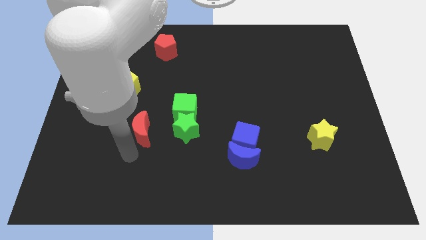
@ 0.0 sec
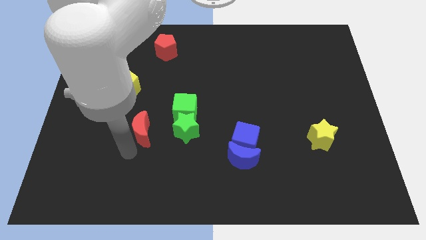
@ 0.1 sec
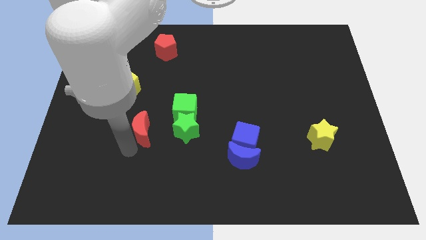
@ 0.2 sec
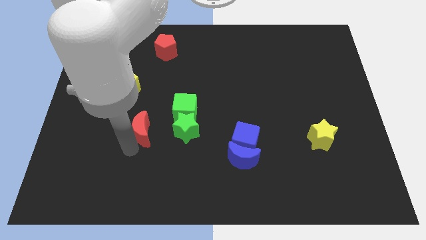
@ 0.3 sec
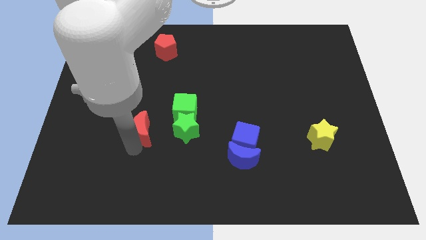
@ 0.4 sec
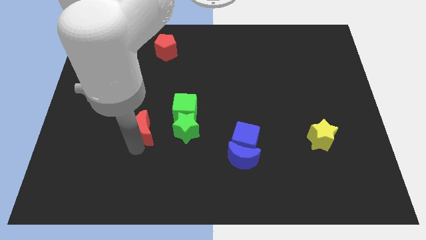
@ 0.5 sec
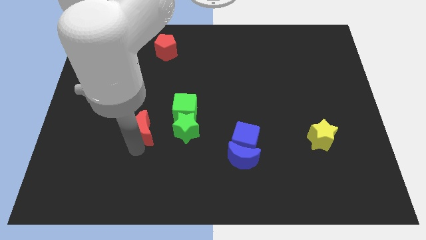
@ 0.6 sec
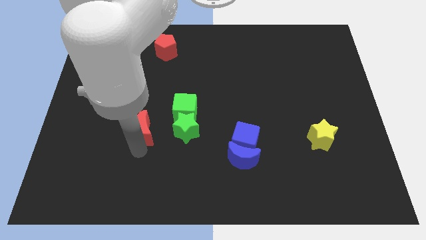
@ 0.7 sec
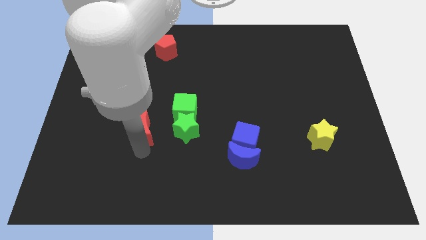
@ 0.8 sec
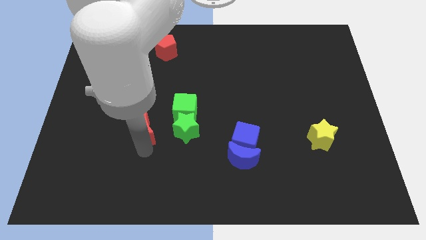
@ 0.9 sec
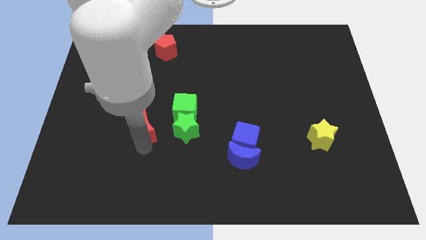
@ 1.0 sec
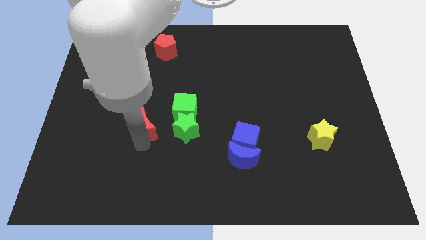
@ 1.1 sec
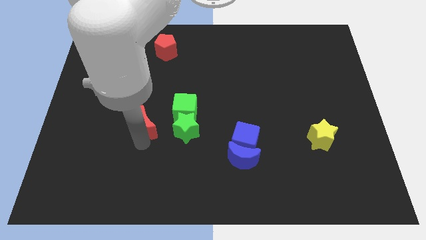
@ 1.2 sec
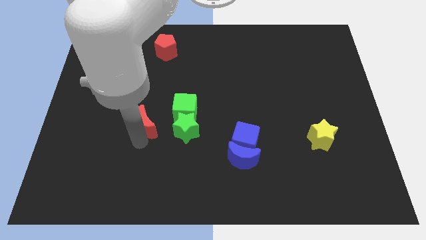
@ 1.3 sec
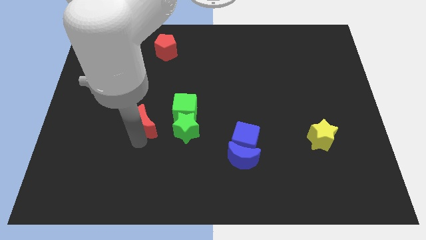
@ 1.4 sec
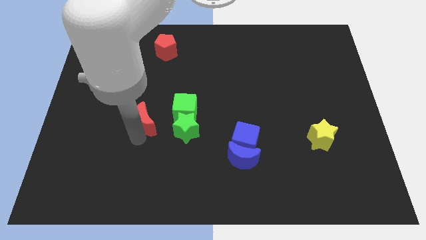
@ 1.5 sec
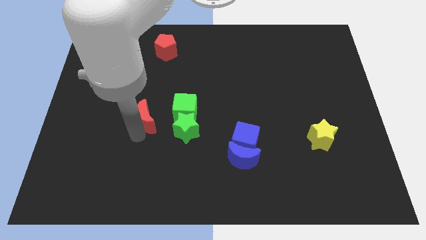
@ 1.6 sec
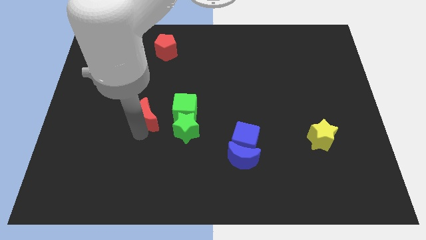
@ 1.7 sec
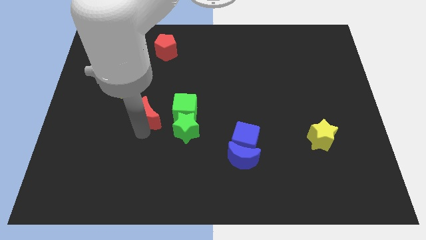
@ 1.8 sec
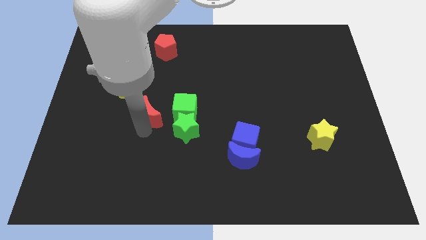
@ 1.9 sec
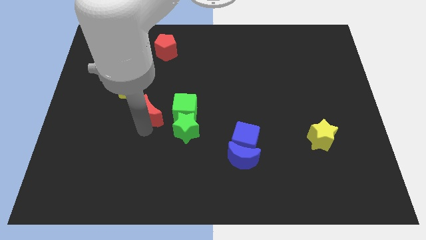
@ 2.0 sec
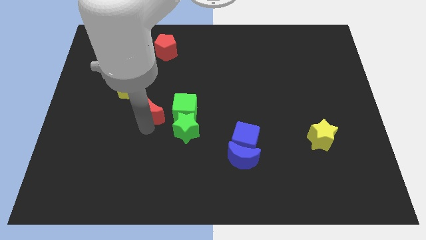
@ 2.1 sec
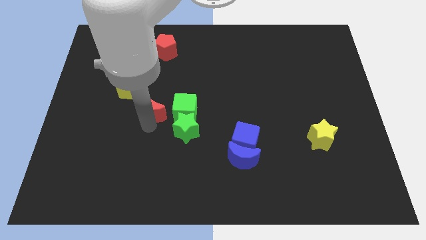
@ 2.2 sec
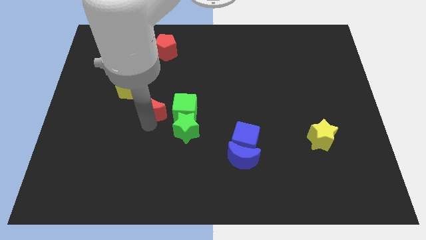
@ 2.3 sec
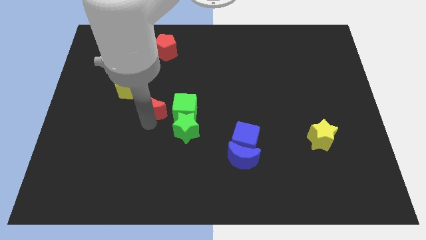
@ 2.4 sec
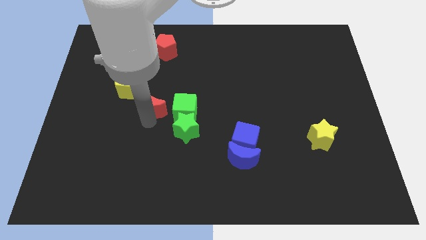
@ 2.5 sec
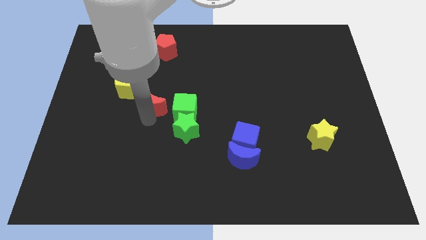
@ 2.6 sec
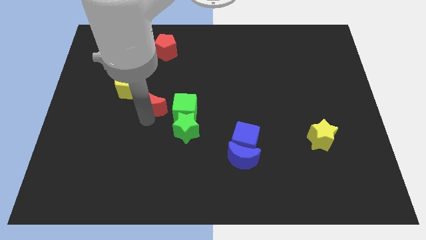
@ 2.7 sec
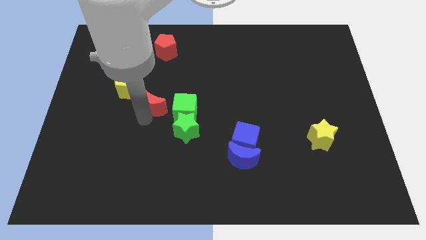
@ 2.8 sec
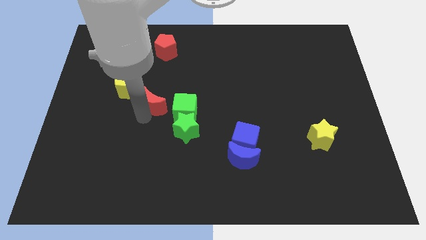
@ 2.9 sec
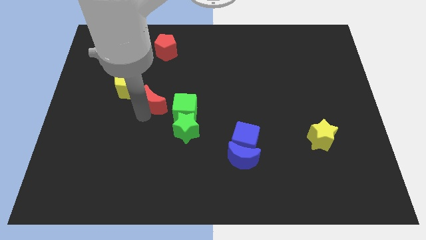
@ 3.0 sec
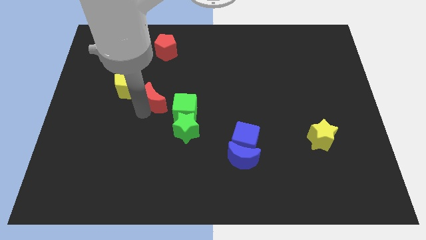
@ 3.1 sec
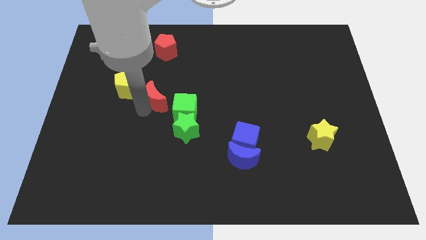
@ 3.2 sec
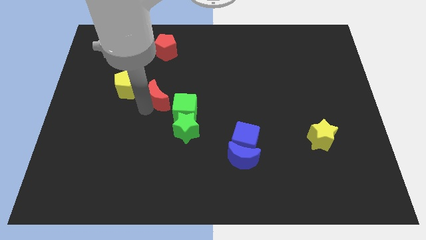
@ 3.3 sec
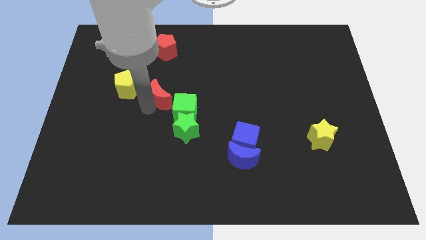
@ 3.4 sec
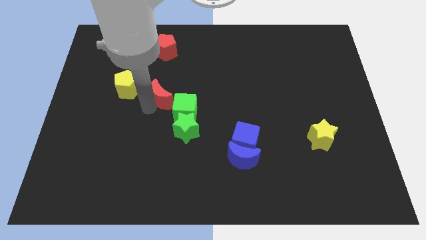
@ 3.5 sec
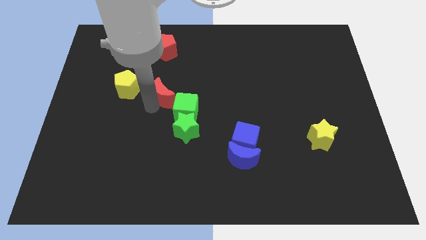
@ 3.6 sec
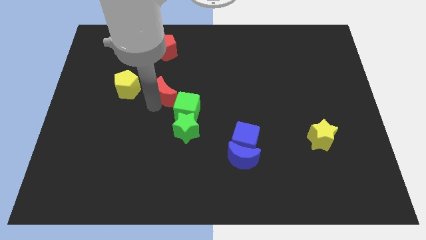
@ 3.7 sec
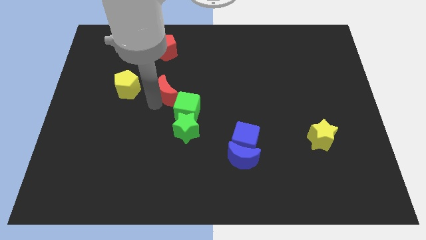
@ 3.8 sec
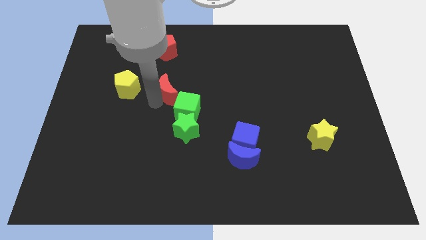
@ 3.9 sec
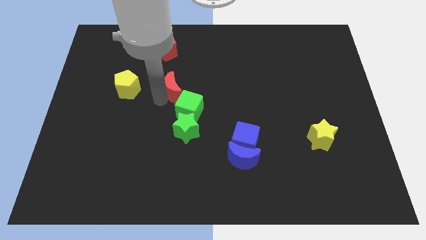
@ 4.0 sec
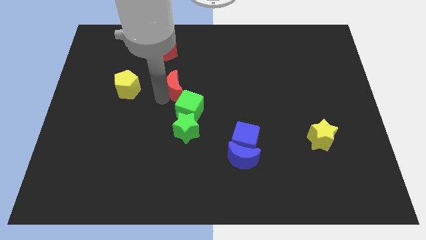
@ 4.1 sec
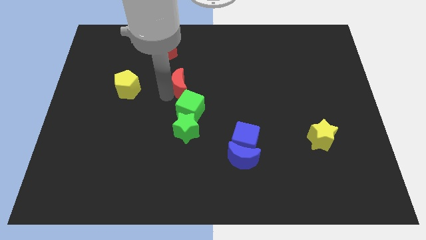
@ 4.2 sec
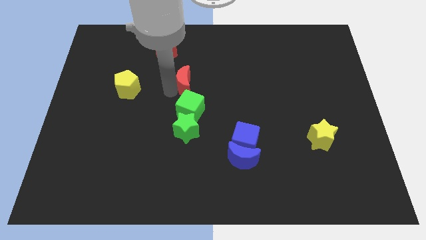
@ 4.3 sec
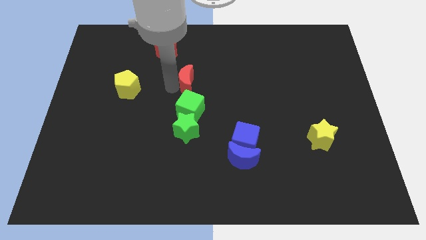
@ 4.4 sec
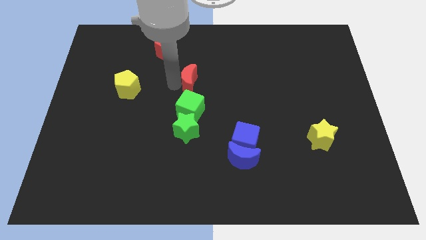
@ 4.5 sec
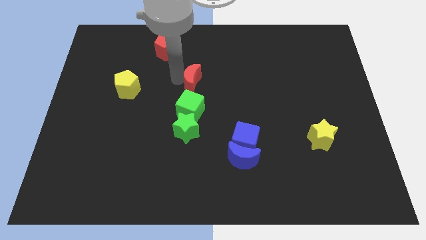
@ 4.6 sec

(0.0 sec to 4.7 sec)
drag red crescent above green cube

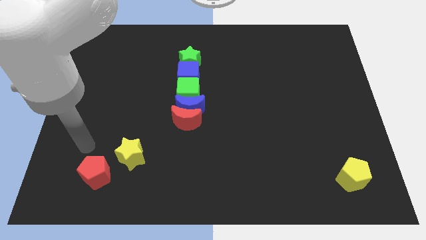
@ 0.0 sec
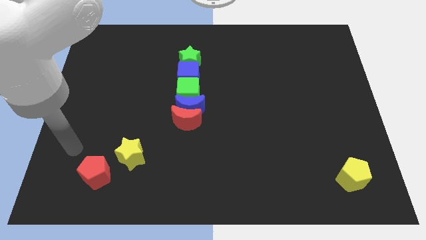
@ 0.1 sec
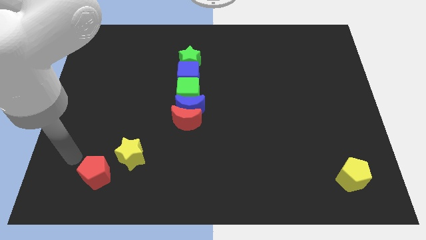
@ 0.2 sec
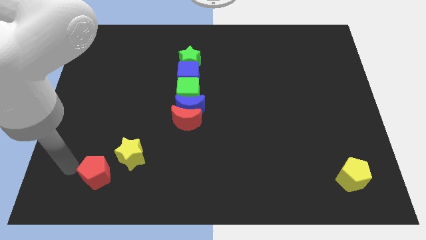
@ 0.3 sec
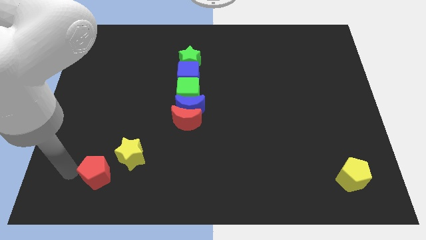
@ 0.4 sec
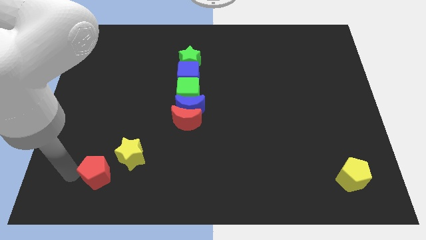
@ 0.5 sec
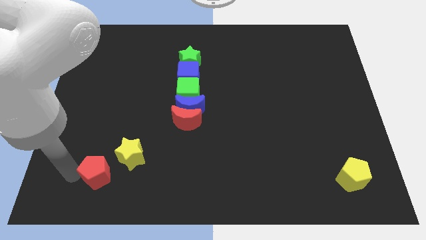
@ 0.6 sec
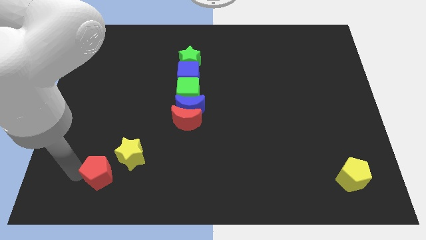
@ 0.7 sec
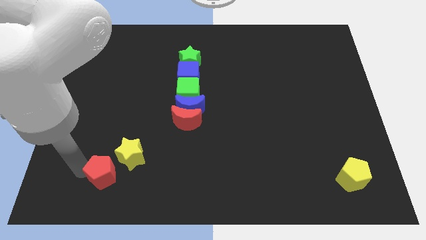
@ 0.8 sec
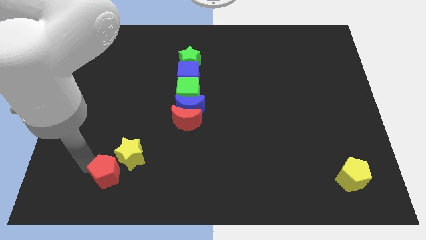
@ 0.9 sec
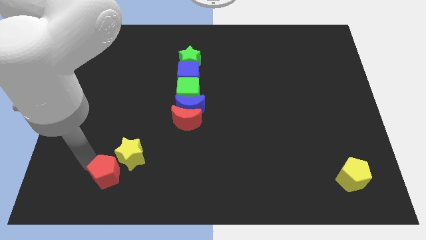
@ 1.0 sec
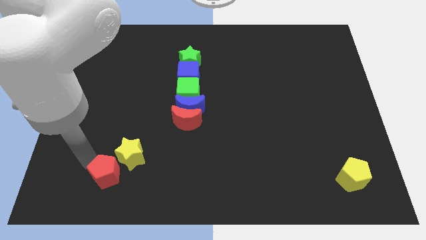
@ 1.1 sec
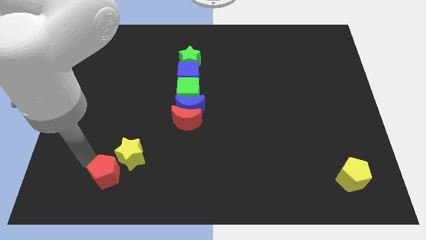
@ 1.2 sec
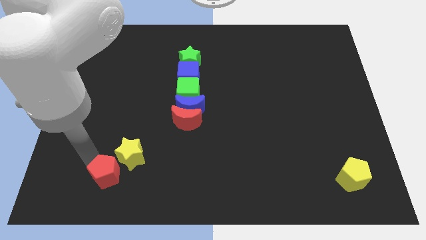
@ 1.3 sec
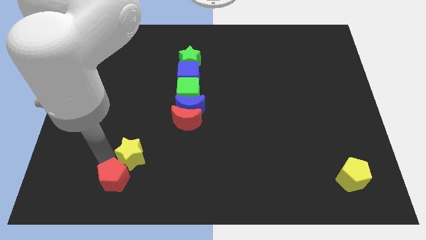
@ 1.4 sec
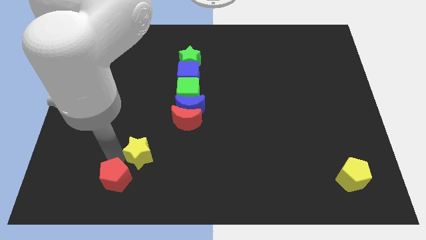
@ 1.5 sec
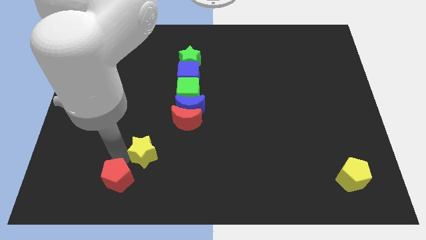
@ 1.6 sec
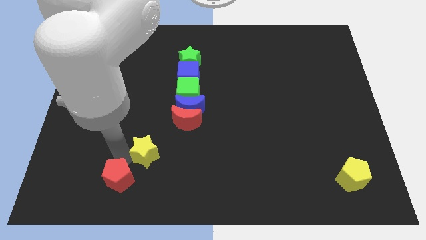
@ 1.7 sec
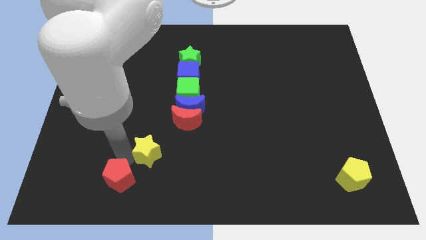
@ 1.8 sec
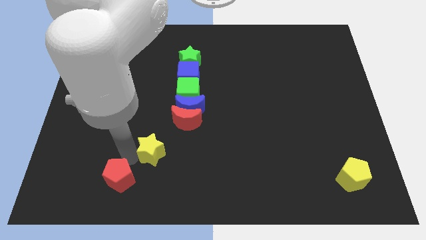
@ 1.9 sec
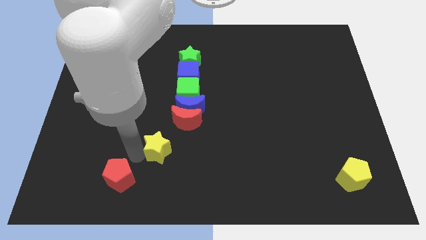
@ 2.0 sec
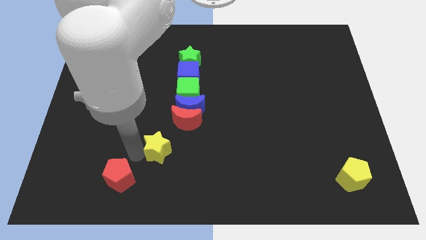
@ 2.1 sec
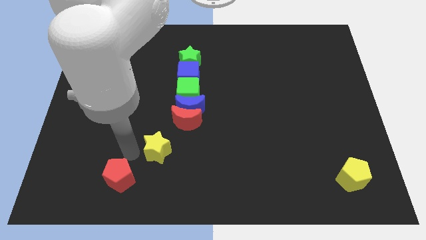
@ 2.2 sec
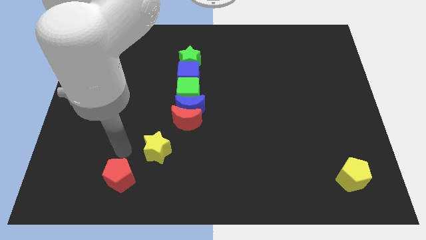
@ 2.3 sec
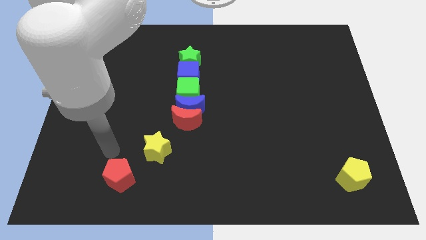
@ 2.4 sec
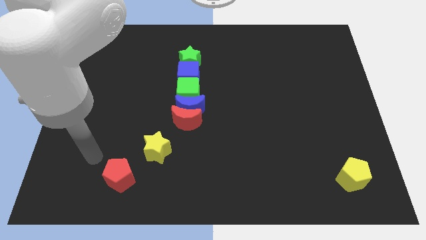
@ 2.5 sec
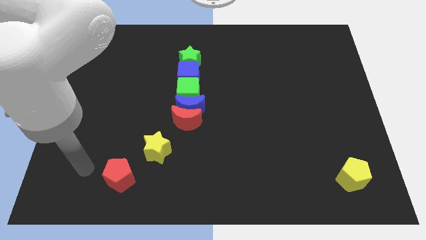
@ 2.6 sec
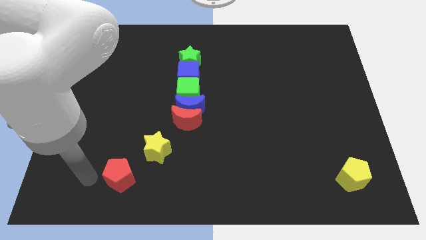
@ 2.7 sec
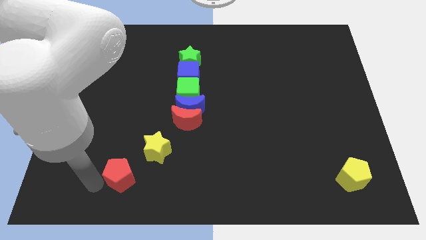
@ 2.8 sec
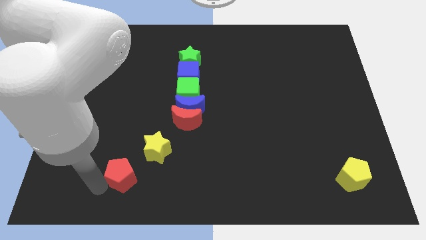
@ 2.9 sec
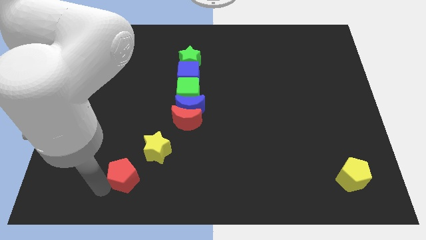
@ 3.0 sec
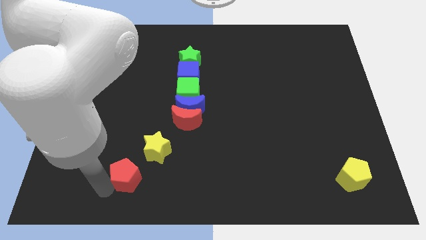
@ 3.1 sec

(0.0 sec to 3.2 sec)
move the yellow star towards the red moon

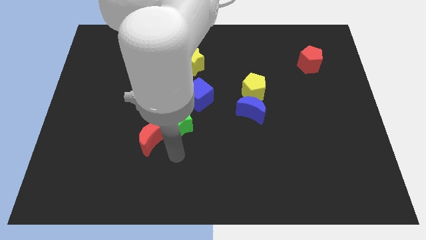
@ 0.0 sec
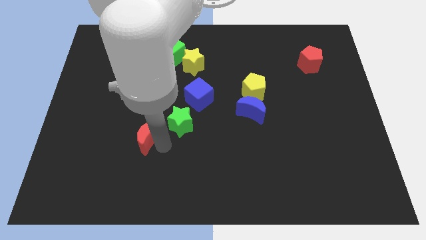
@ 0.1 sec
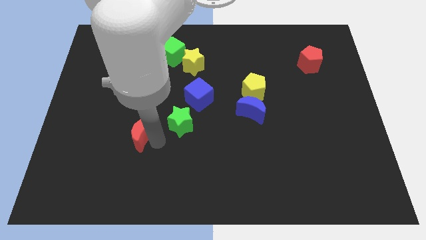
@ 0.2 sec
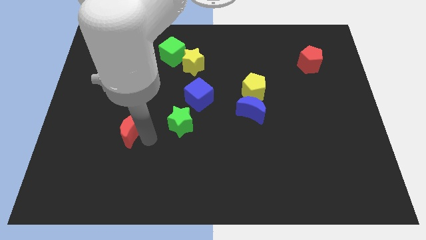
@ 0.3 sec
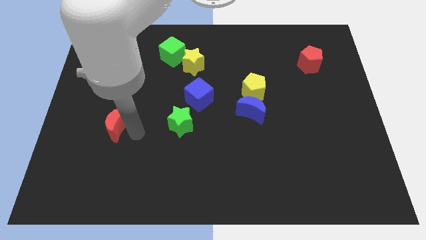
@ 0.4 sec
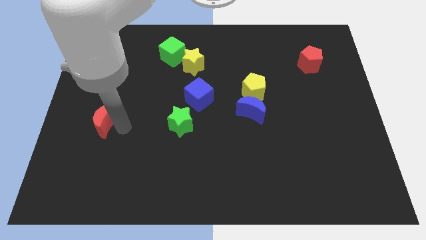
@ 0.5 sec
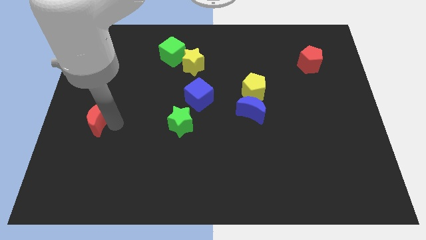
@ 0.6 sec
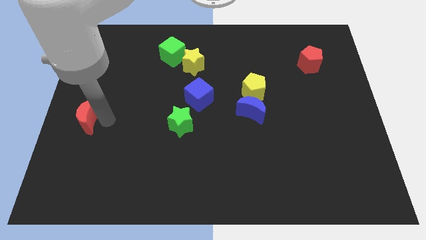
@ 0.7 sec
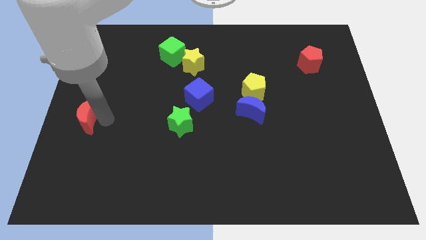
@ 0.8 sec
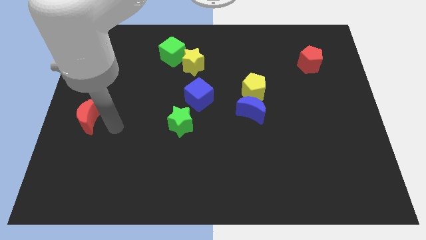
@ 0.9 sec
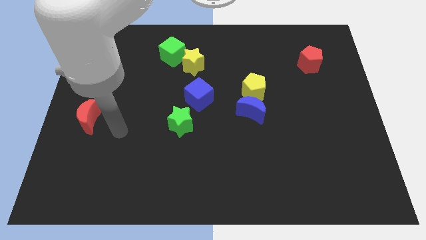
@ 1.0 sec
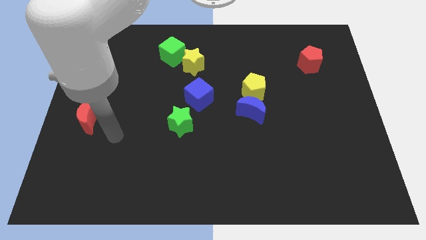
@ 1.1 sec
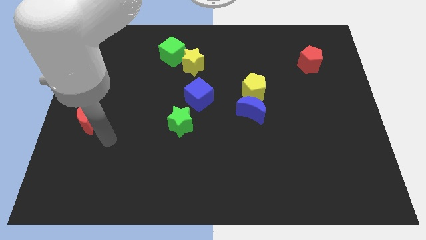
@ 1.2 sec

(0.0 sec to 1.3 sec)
drag the red moon towards the center left
